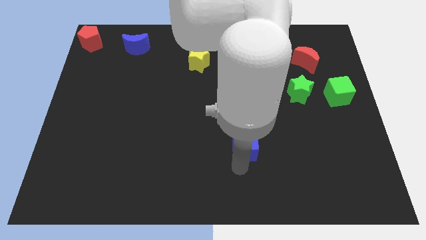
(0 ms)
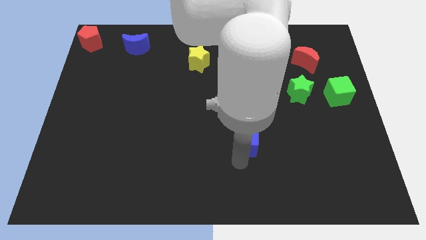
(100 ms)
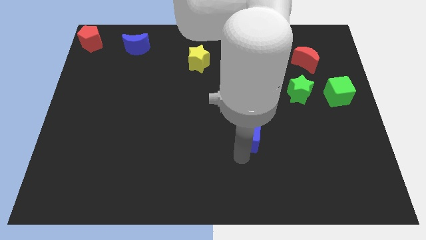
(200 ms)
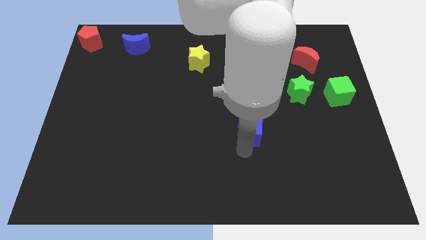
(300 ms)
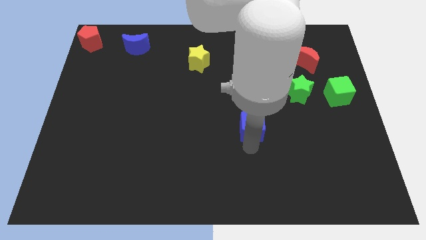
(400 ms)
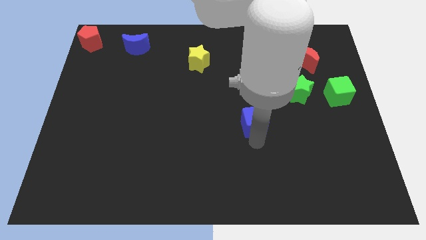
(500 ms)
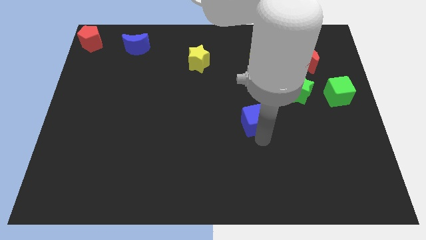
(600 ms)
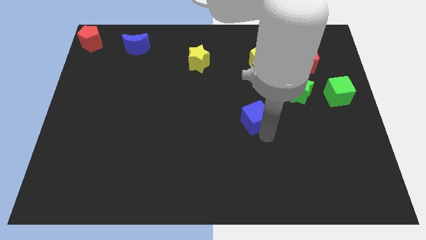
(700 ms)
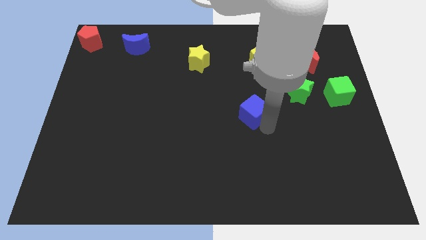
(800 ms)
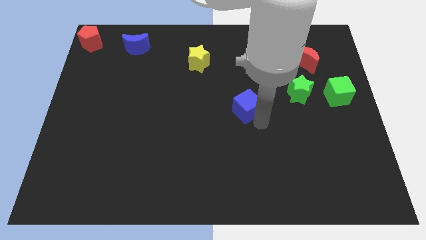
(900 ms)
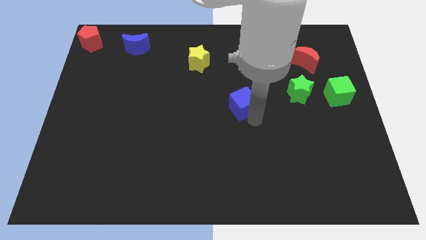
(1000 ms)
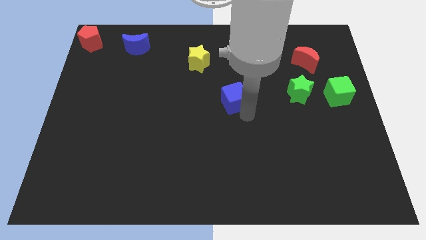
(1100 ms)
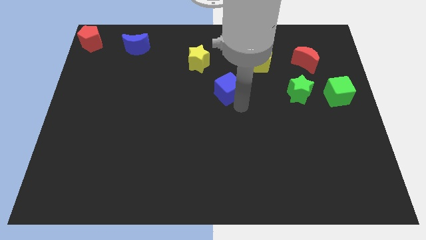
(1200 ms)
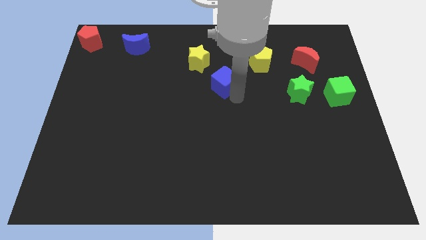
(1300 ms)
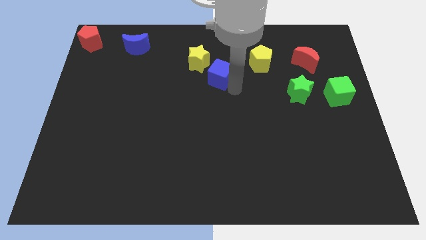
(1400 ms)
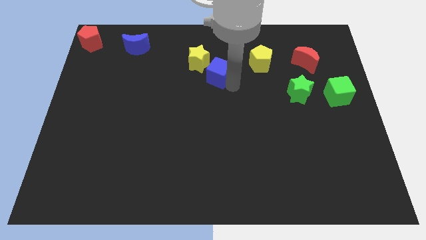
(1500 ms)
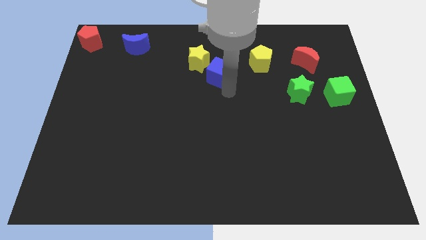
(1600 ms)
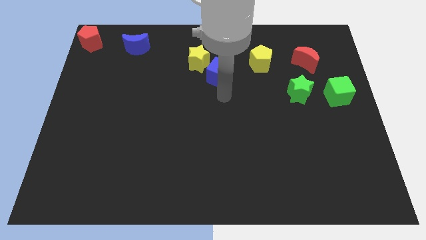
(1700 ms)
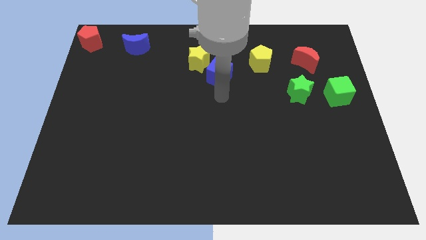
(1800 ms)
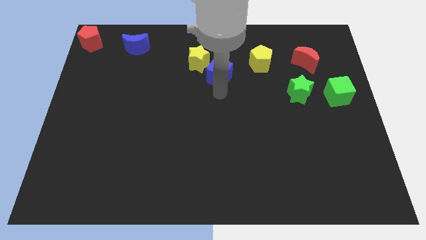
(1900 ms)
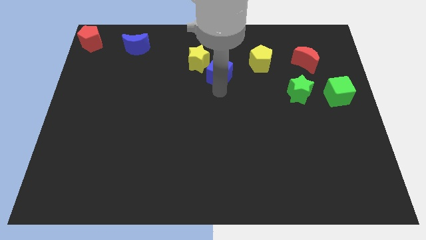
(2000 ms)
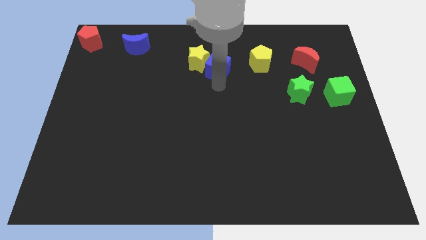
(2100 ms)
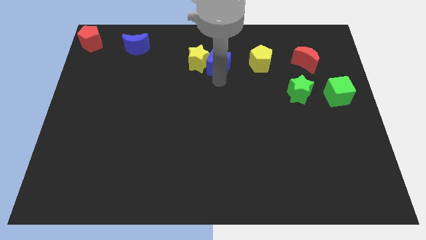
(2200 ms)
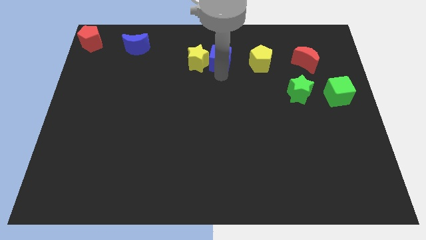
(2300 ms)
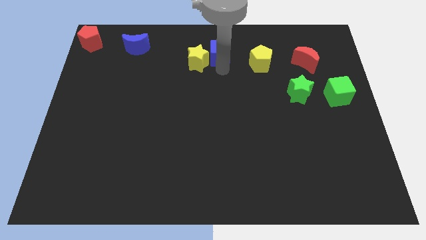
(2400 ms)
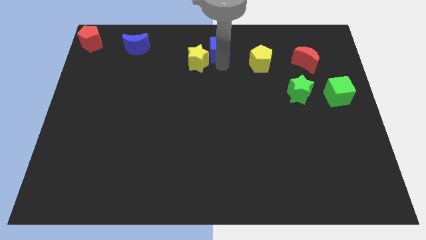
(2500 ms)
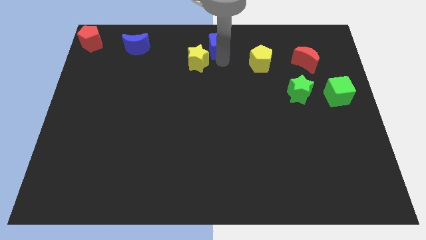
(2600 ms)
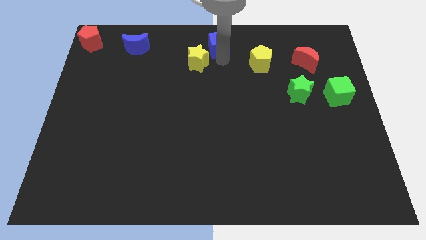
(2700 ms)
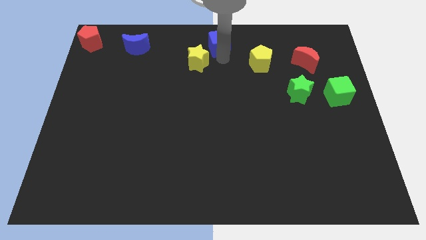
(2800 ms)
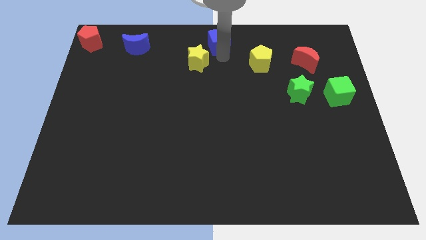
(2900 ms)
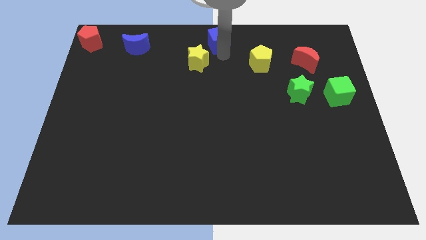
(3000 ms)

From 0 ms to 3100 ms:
move blue cube towards top center

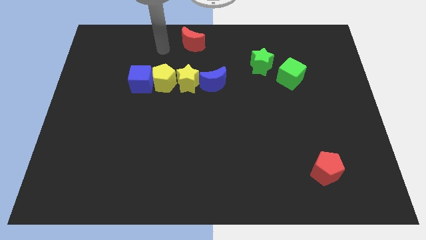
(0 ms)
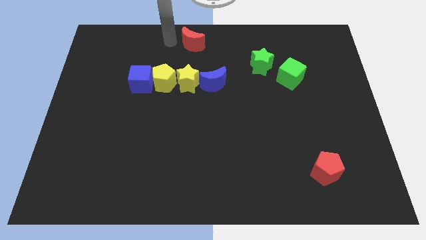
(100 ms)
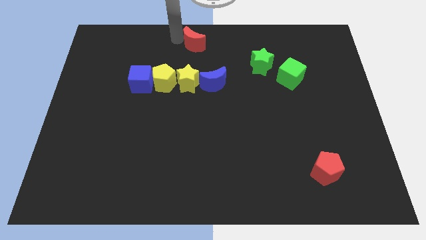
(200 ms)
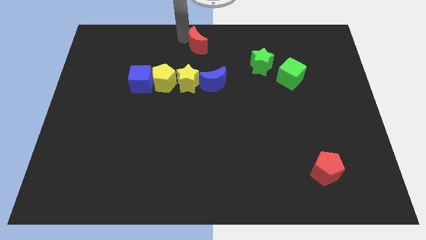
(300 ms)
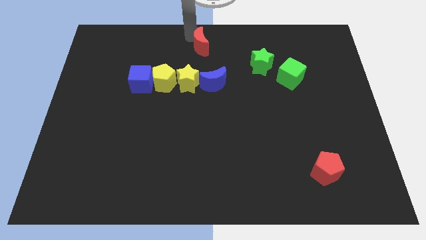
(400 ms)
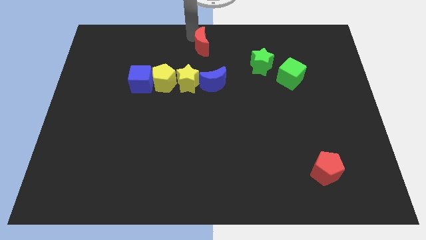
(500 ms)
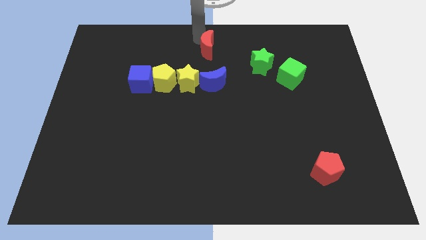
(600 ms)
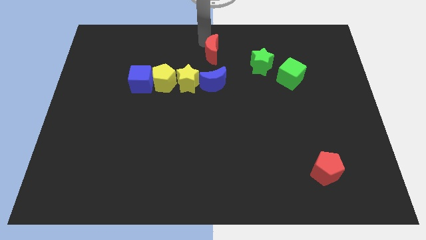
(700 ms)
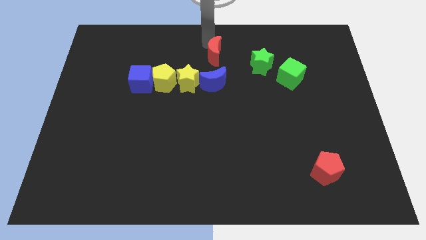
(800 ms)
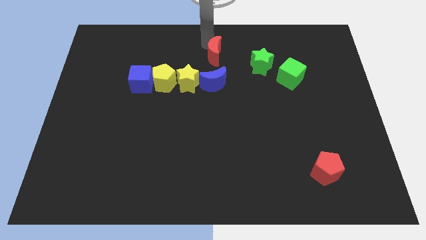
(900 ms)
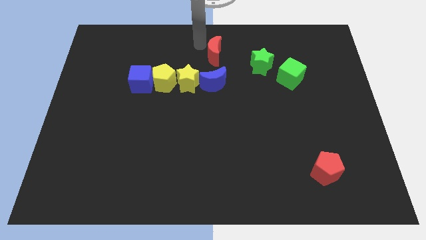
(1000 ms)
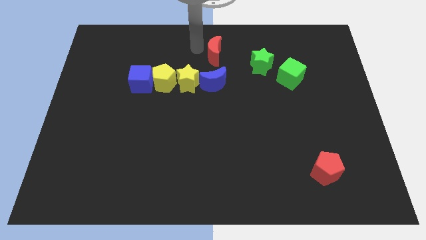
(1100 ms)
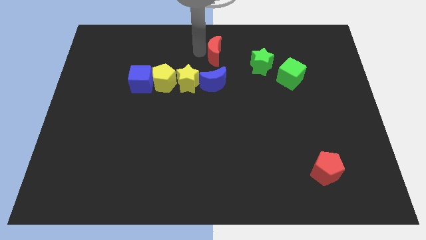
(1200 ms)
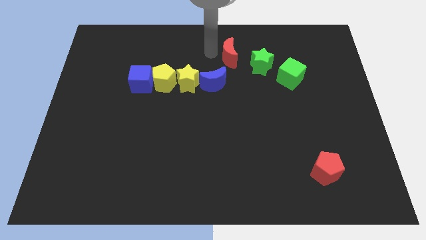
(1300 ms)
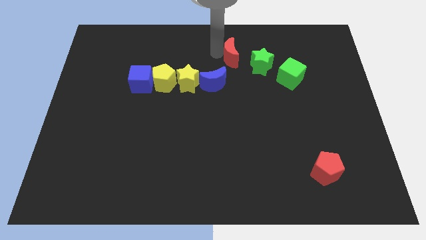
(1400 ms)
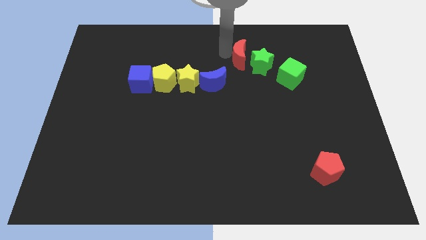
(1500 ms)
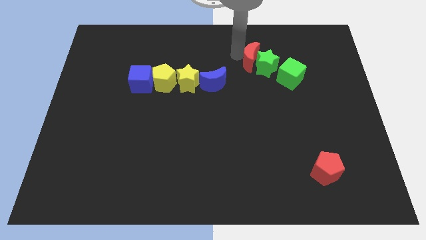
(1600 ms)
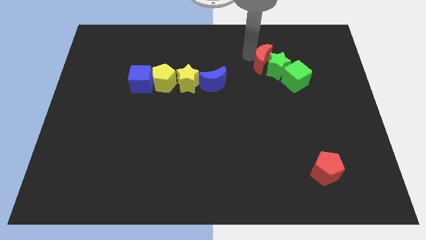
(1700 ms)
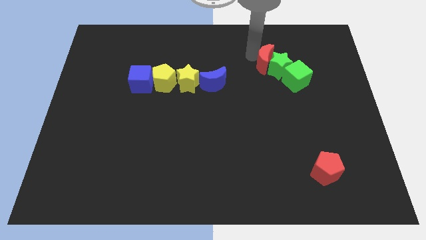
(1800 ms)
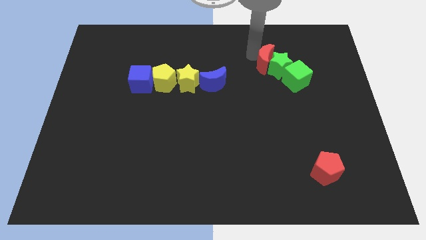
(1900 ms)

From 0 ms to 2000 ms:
move the red crescent towards the left side of the green star

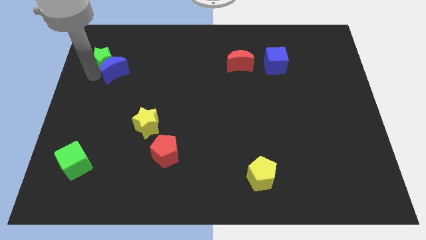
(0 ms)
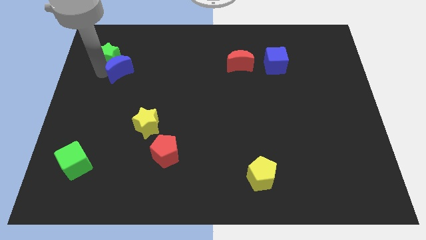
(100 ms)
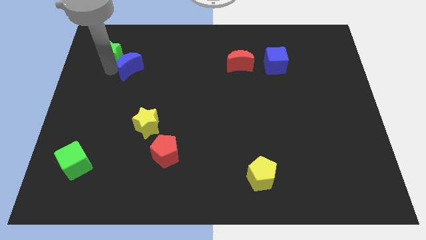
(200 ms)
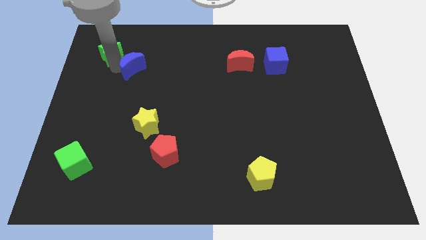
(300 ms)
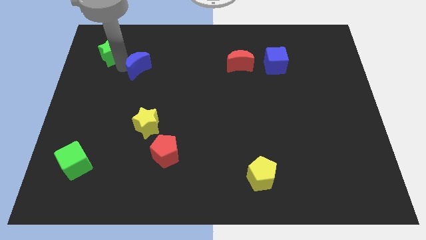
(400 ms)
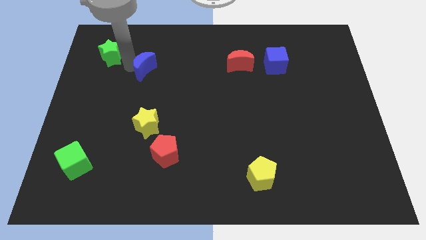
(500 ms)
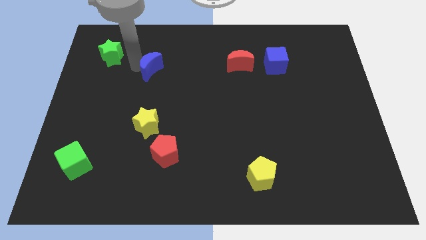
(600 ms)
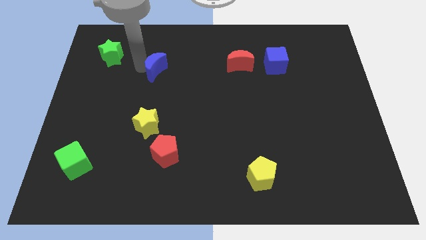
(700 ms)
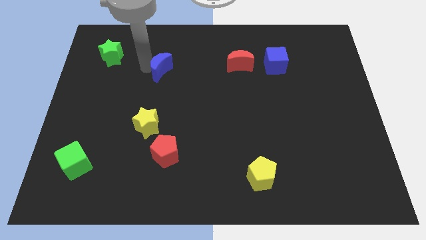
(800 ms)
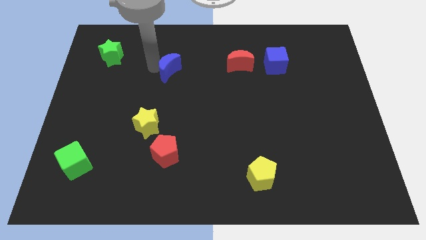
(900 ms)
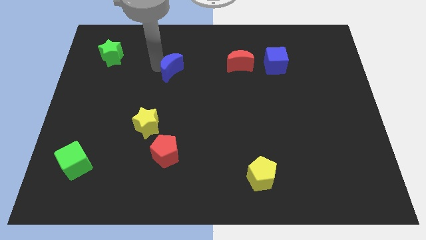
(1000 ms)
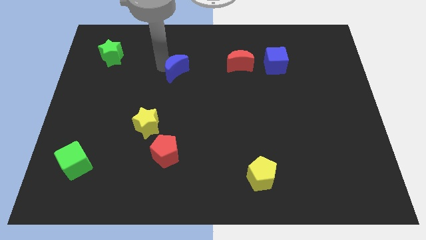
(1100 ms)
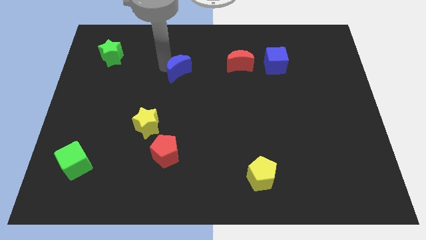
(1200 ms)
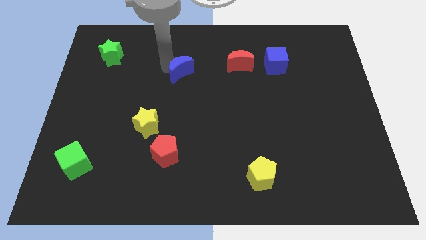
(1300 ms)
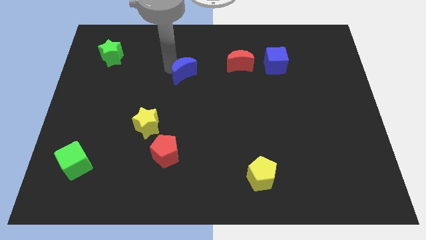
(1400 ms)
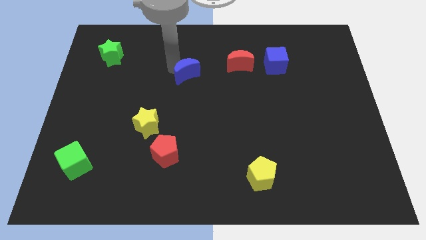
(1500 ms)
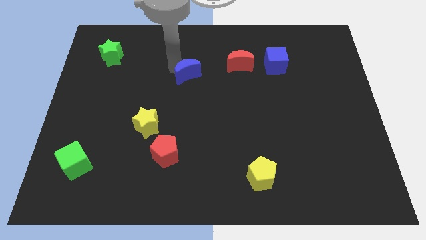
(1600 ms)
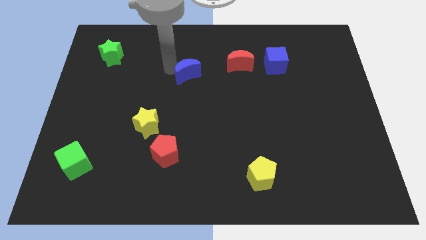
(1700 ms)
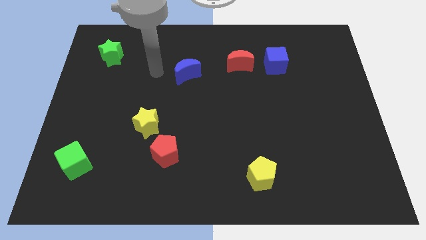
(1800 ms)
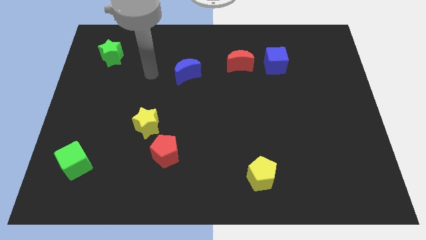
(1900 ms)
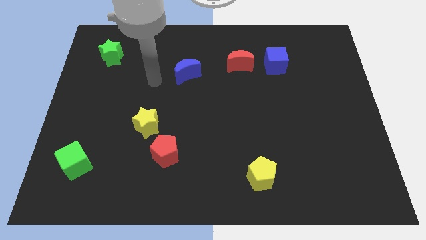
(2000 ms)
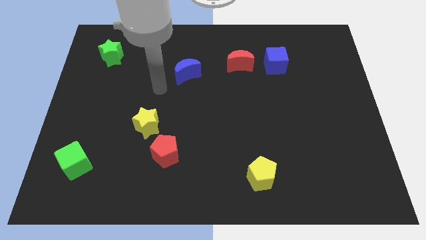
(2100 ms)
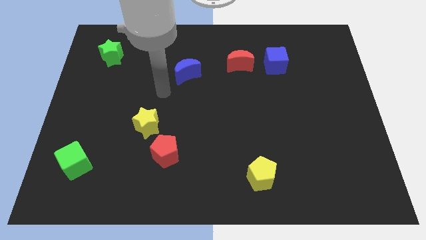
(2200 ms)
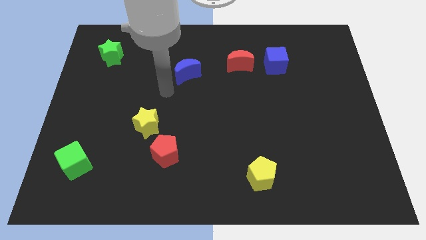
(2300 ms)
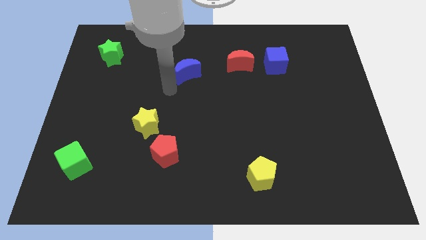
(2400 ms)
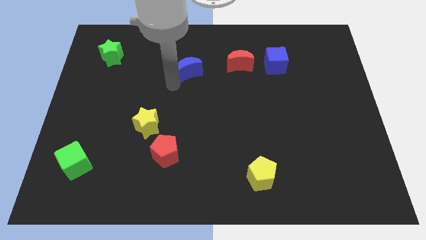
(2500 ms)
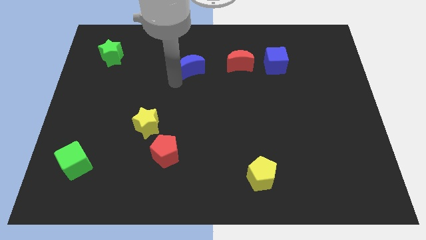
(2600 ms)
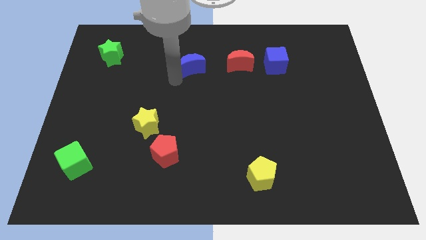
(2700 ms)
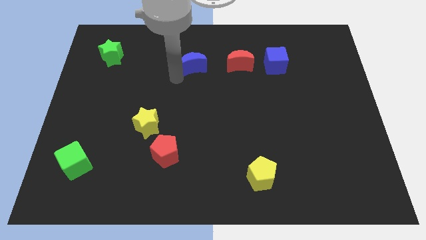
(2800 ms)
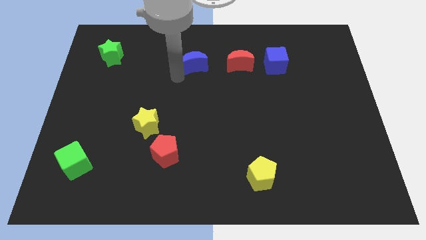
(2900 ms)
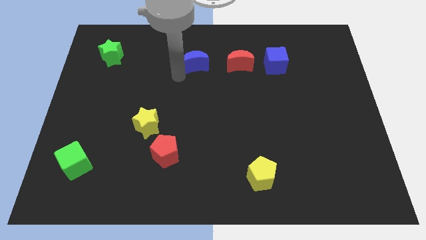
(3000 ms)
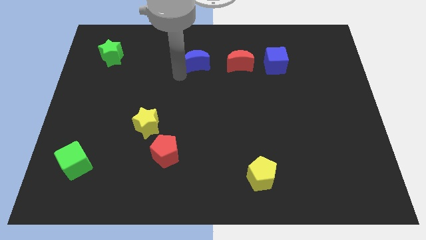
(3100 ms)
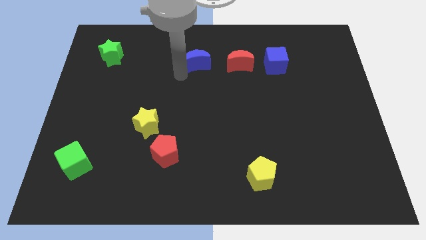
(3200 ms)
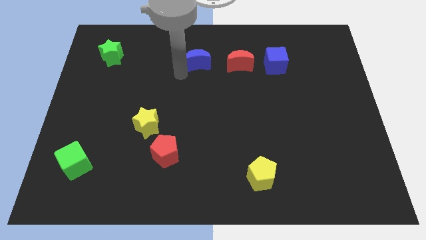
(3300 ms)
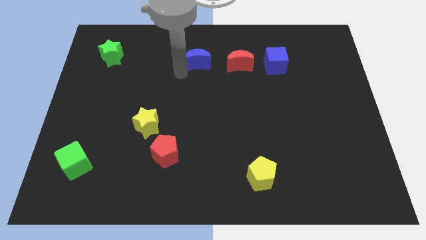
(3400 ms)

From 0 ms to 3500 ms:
move the blue crescent to the left of the red crescent

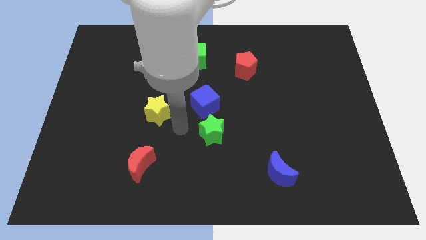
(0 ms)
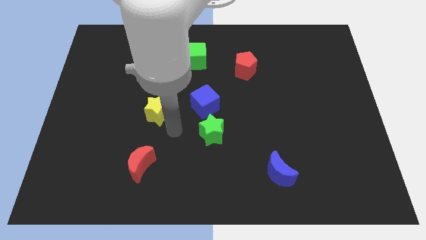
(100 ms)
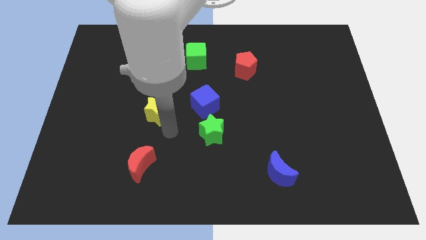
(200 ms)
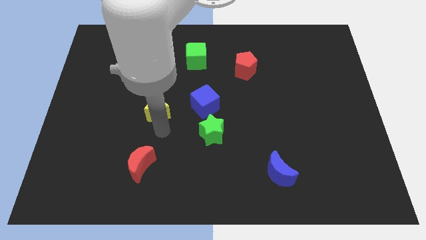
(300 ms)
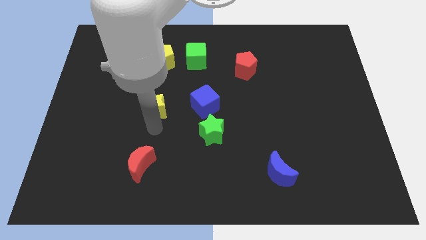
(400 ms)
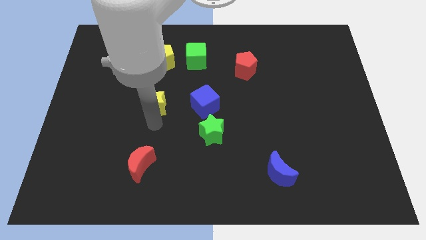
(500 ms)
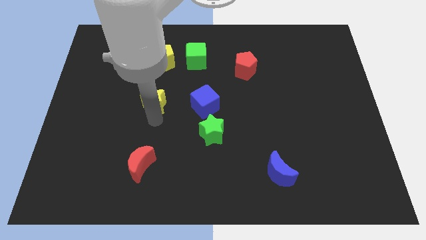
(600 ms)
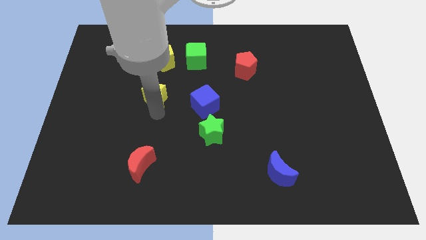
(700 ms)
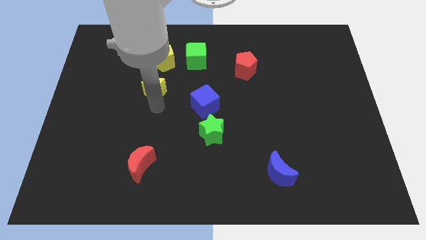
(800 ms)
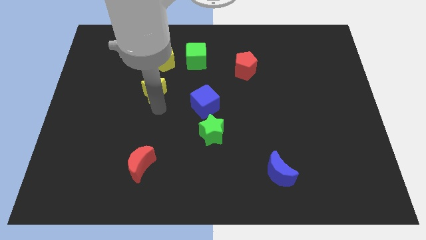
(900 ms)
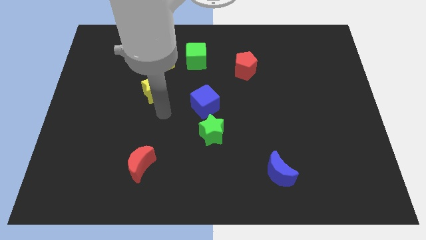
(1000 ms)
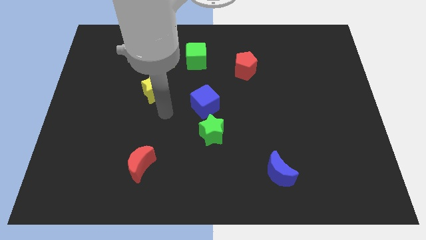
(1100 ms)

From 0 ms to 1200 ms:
slightly push the yellow star up
